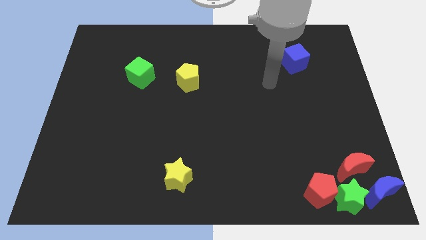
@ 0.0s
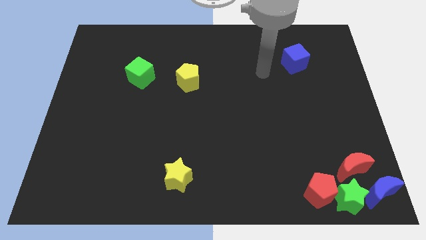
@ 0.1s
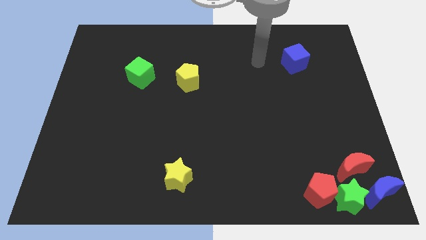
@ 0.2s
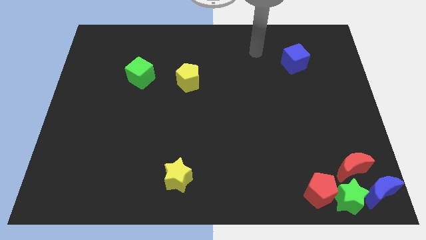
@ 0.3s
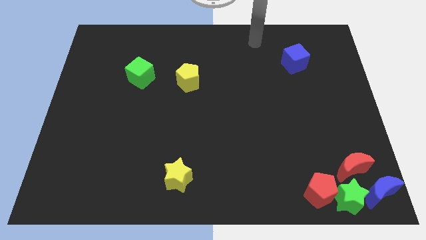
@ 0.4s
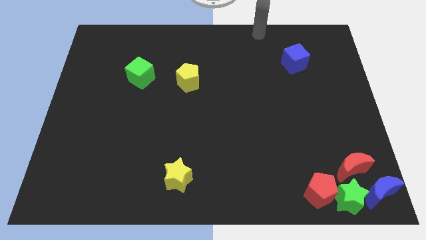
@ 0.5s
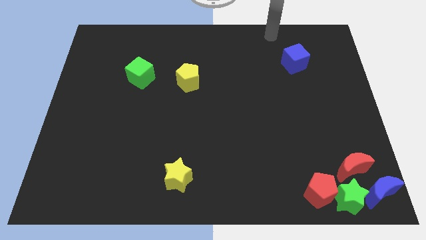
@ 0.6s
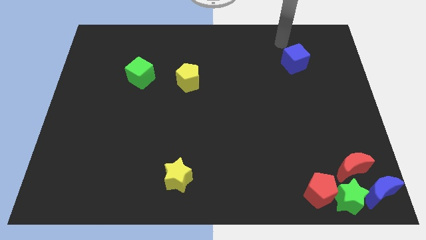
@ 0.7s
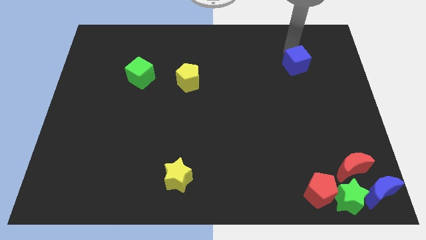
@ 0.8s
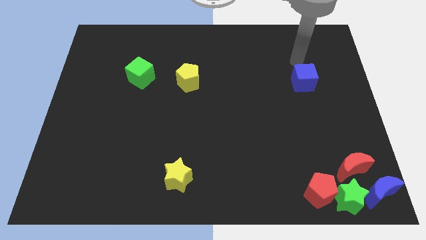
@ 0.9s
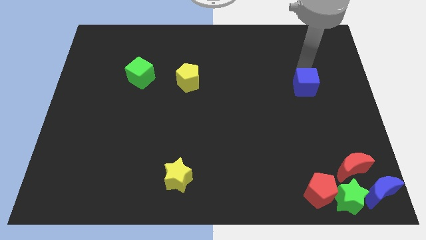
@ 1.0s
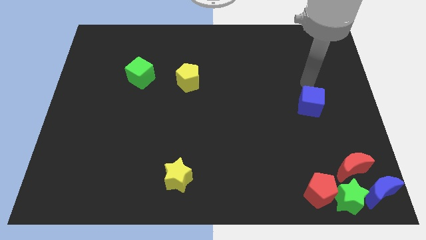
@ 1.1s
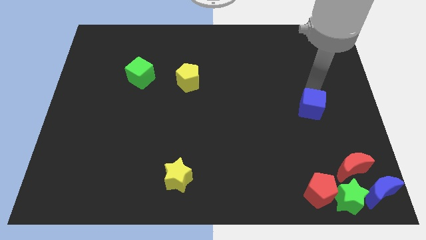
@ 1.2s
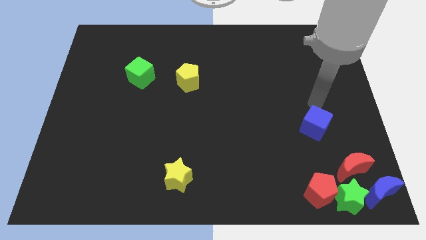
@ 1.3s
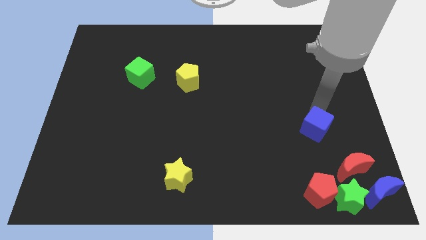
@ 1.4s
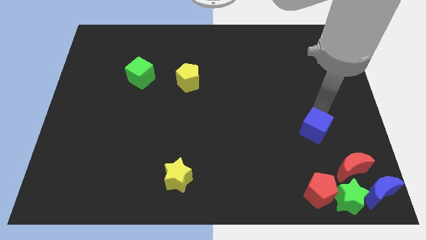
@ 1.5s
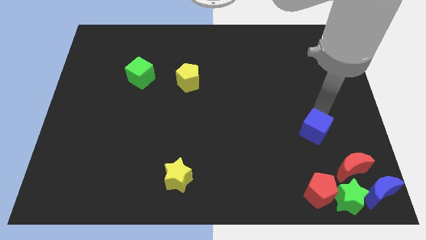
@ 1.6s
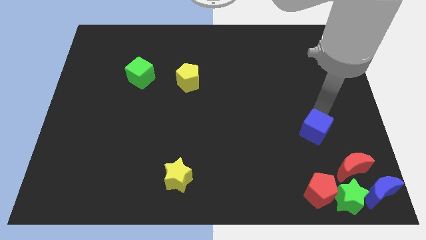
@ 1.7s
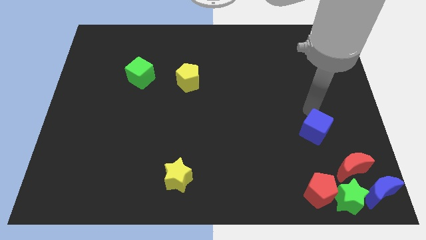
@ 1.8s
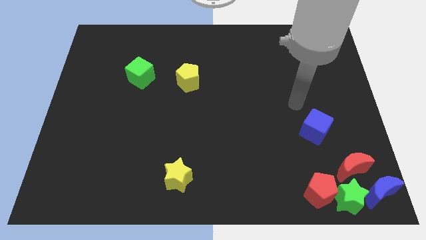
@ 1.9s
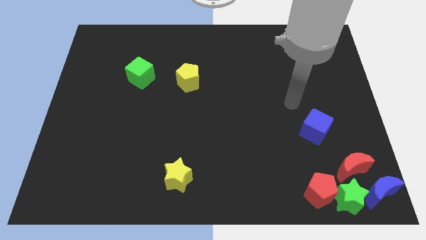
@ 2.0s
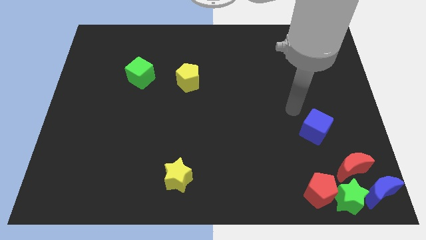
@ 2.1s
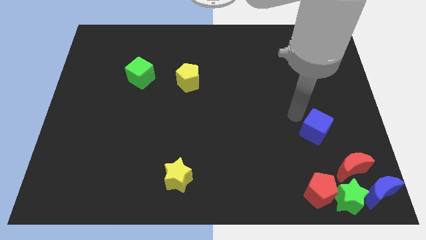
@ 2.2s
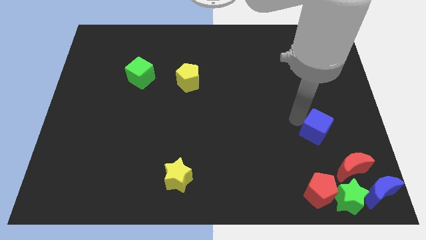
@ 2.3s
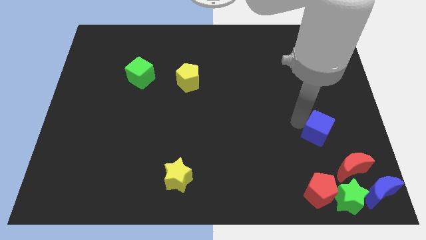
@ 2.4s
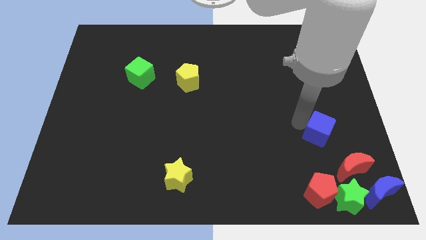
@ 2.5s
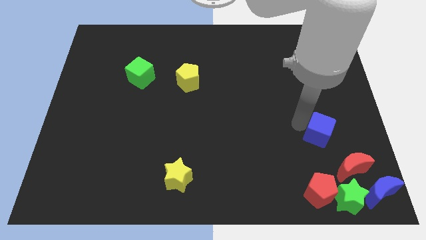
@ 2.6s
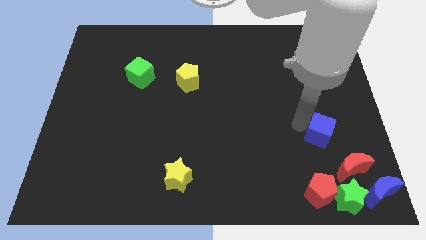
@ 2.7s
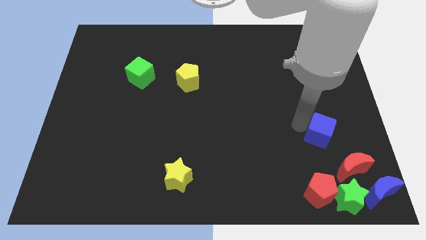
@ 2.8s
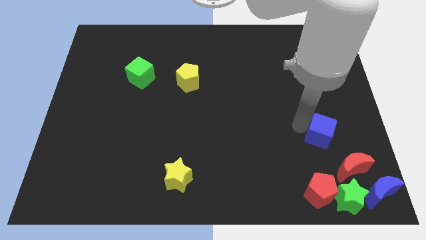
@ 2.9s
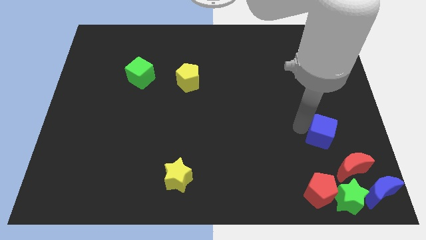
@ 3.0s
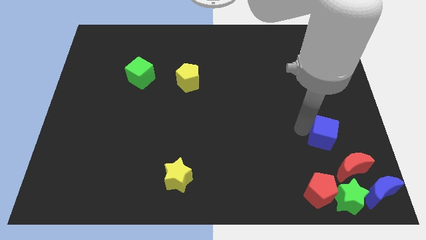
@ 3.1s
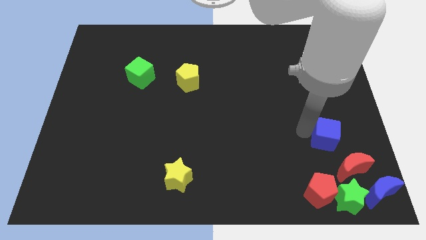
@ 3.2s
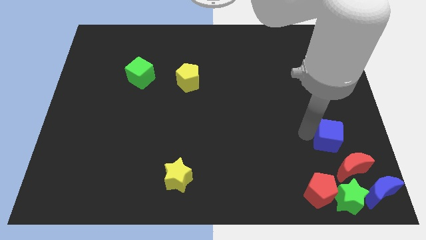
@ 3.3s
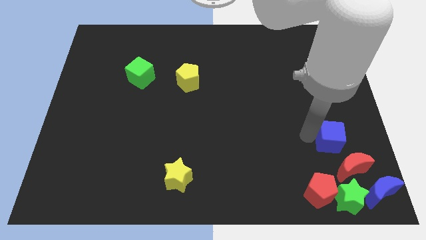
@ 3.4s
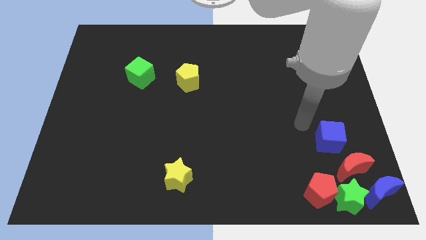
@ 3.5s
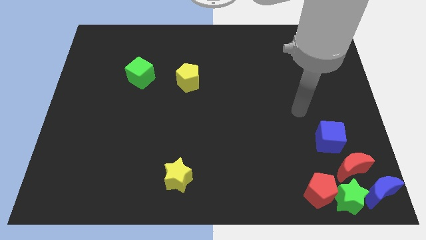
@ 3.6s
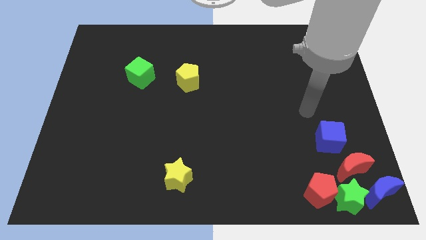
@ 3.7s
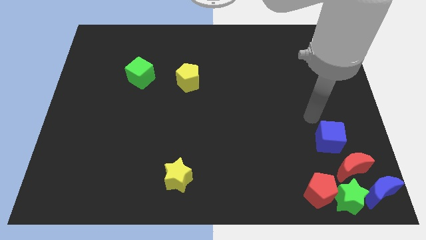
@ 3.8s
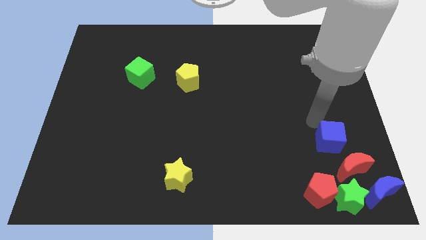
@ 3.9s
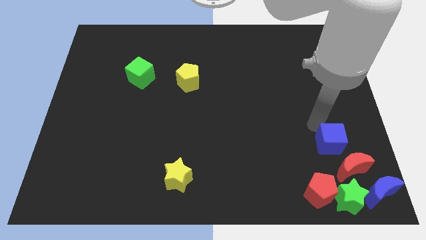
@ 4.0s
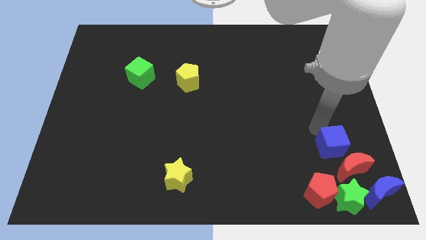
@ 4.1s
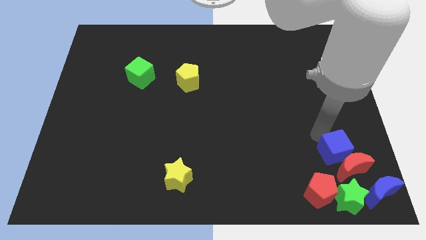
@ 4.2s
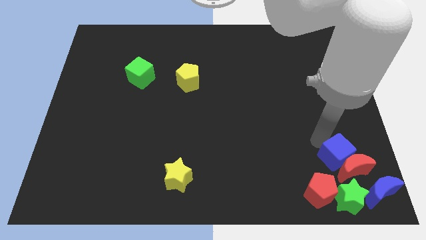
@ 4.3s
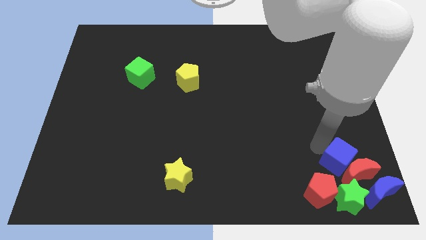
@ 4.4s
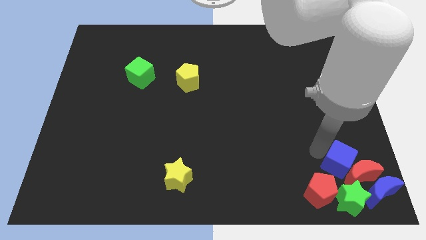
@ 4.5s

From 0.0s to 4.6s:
add the blue cube to the group of blocks at the bottom right corner of the board

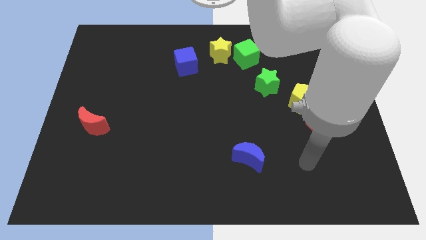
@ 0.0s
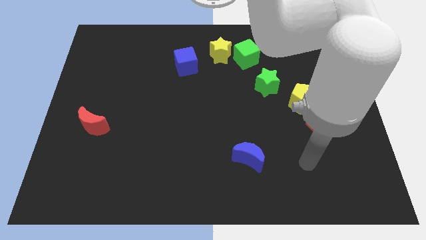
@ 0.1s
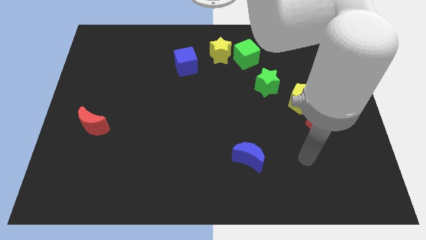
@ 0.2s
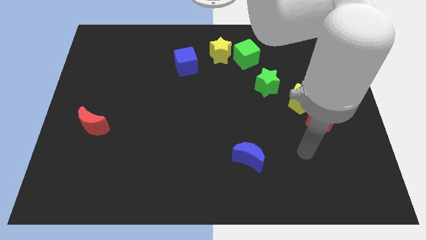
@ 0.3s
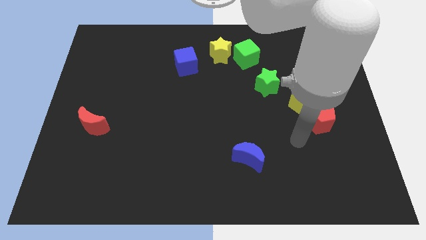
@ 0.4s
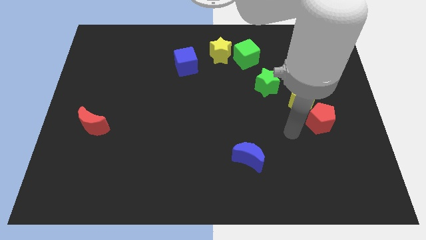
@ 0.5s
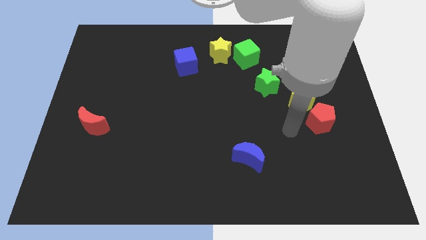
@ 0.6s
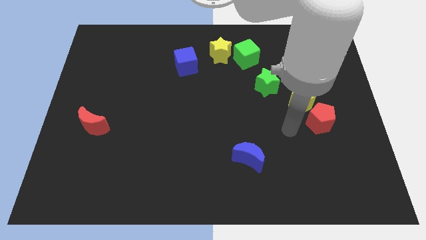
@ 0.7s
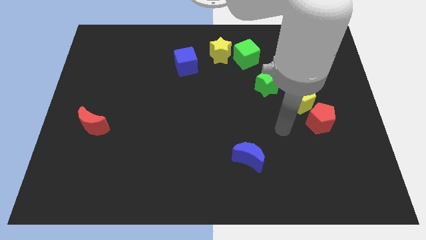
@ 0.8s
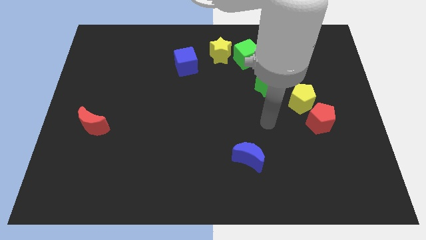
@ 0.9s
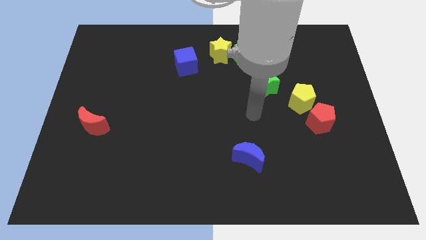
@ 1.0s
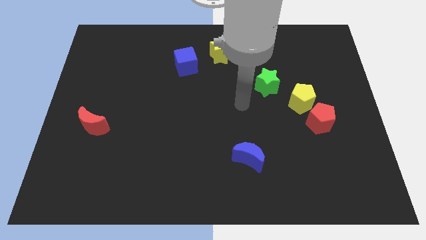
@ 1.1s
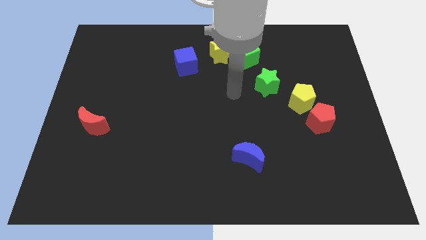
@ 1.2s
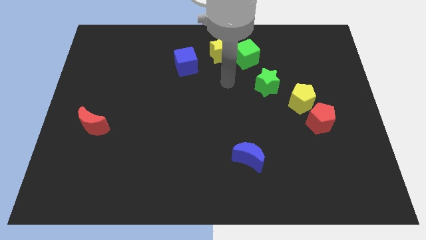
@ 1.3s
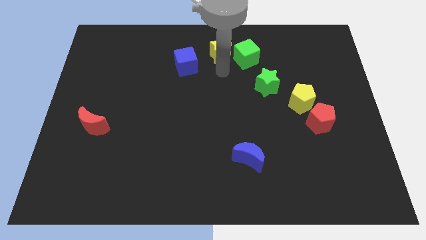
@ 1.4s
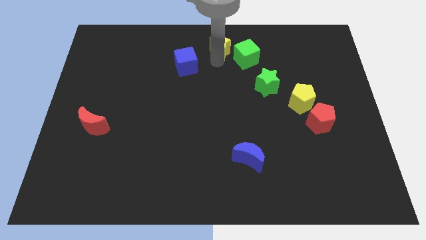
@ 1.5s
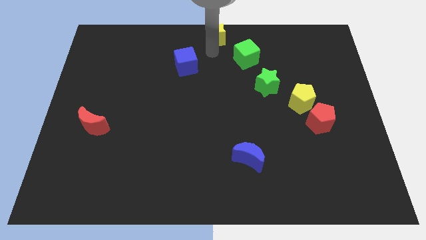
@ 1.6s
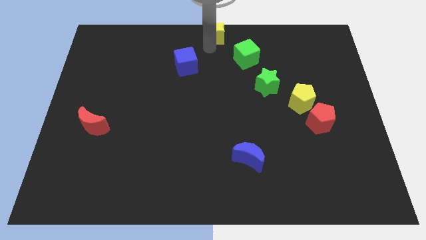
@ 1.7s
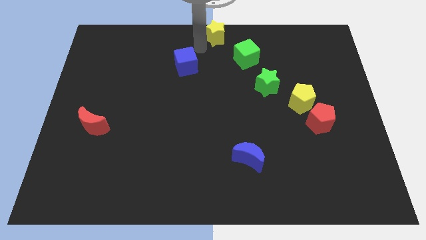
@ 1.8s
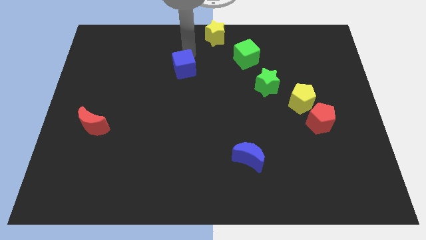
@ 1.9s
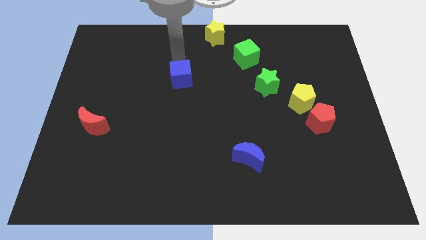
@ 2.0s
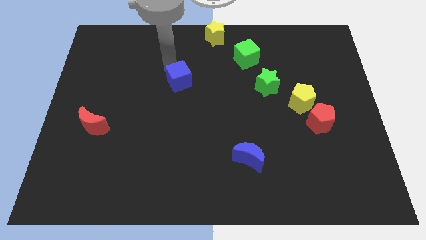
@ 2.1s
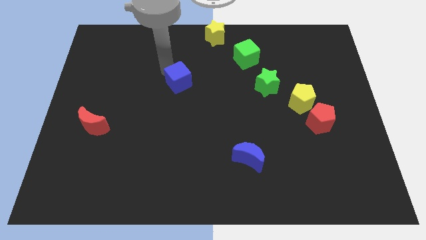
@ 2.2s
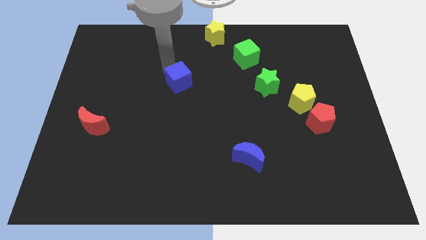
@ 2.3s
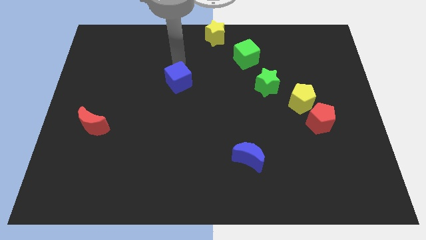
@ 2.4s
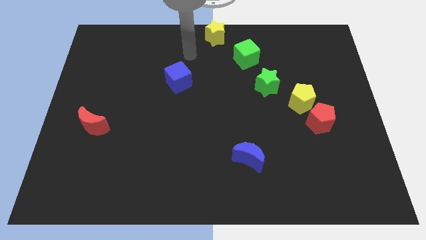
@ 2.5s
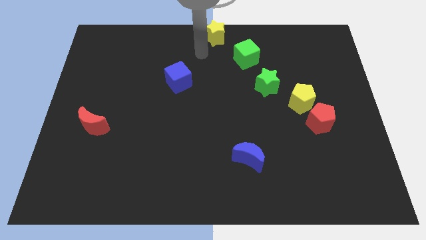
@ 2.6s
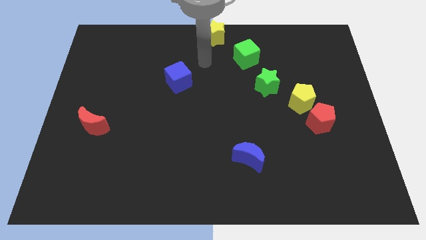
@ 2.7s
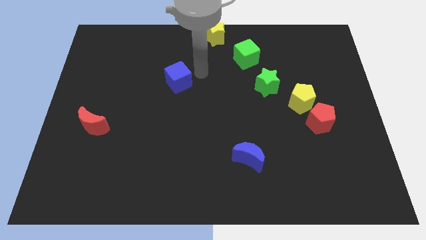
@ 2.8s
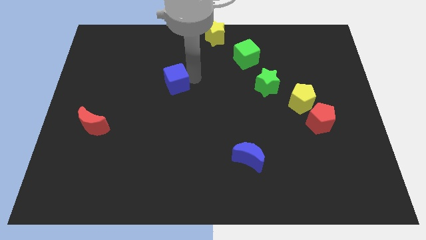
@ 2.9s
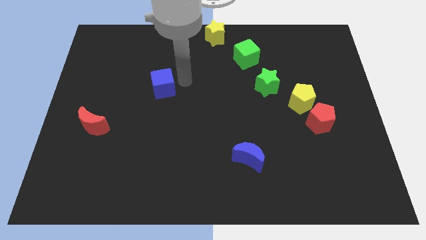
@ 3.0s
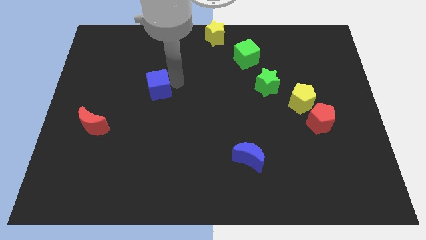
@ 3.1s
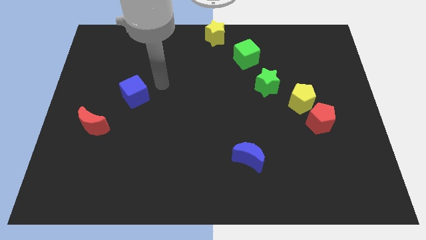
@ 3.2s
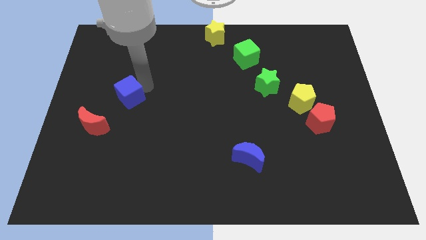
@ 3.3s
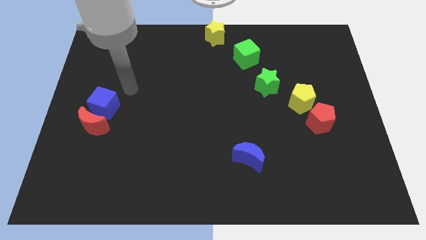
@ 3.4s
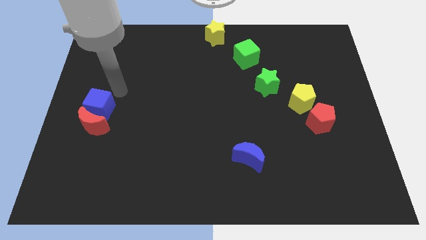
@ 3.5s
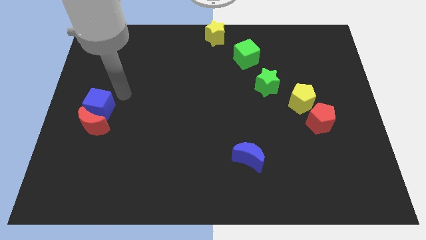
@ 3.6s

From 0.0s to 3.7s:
place the blue cube vertically above the red moon

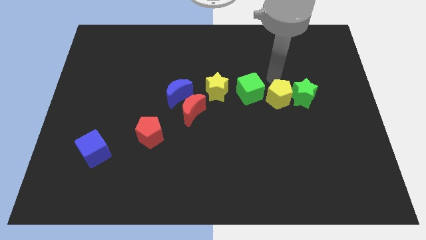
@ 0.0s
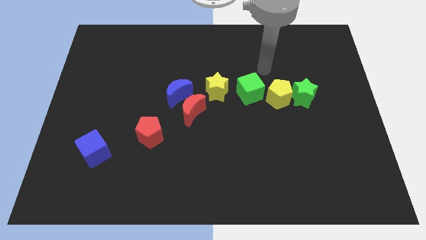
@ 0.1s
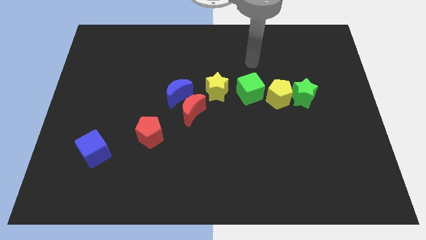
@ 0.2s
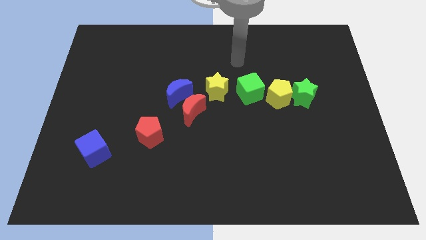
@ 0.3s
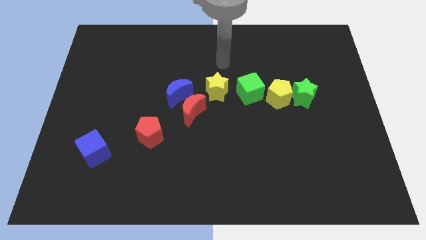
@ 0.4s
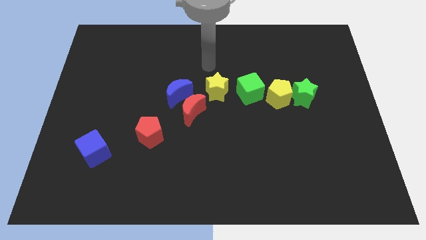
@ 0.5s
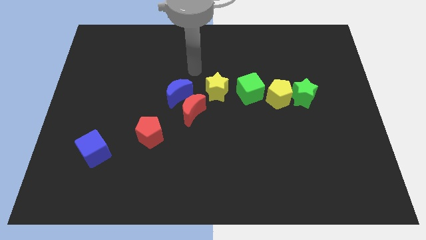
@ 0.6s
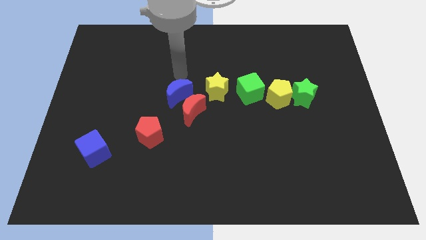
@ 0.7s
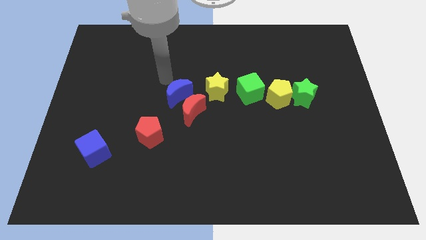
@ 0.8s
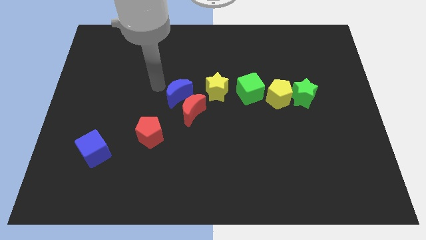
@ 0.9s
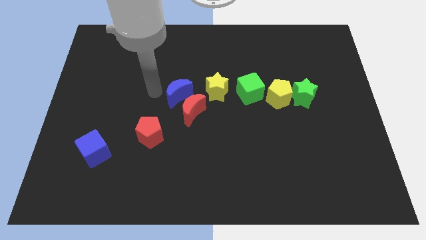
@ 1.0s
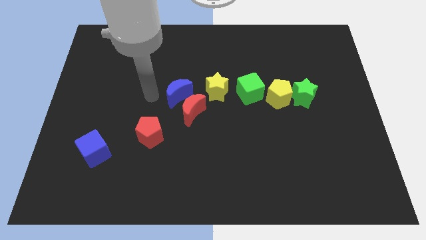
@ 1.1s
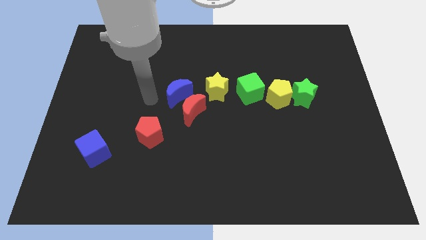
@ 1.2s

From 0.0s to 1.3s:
move the arm towards the red crescent
